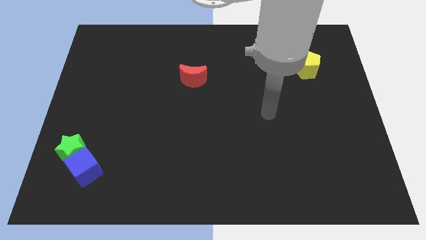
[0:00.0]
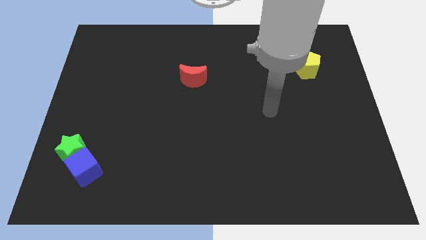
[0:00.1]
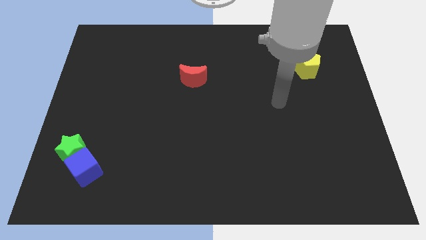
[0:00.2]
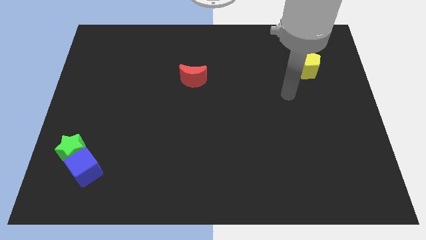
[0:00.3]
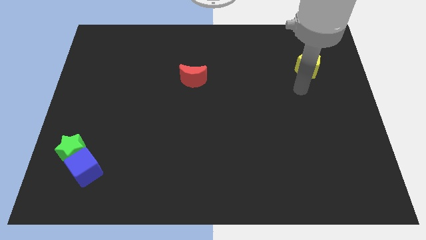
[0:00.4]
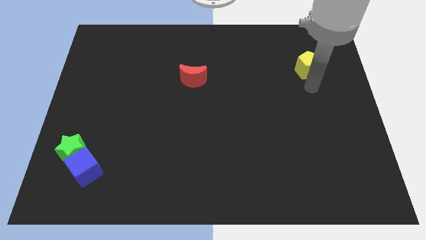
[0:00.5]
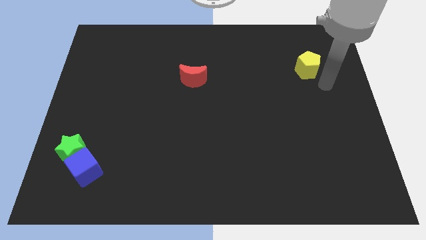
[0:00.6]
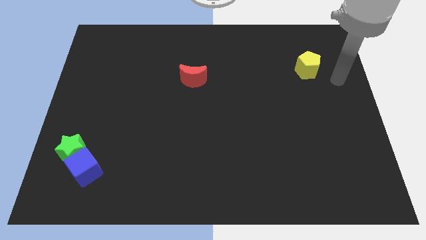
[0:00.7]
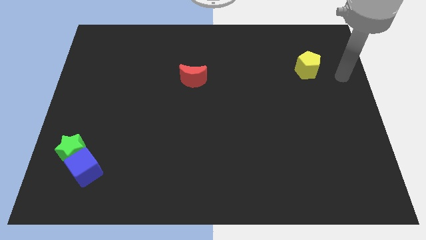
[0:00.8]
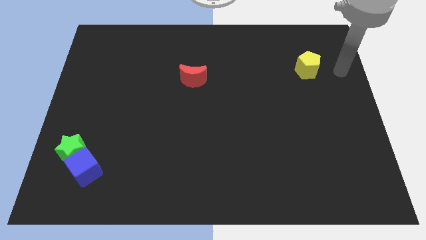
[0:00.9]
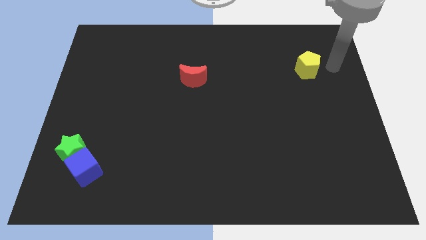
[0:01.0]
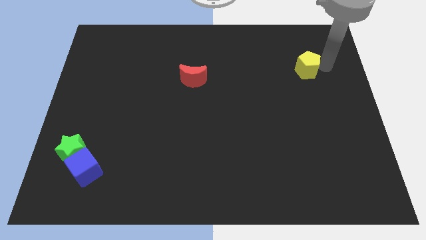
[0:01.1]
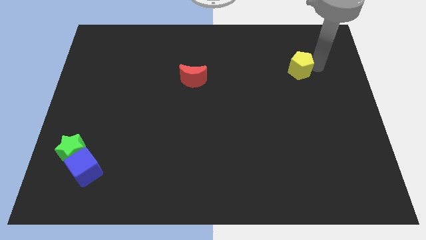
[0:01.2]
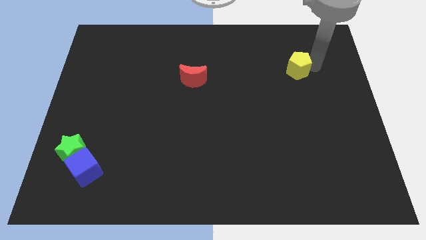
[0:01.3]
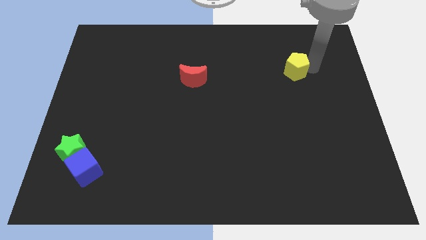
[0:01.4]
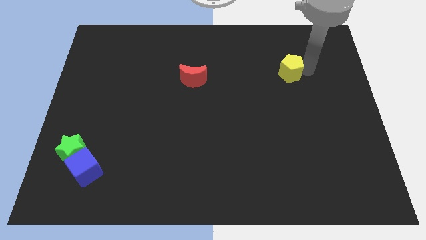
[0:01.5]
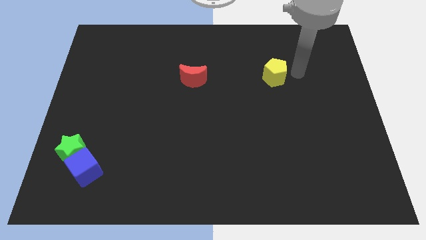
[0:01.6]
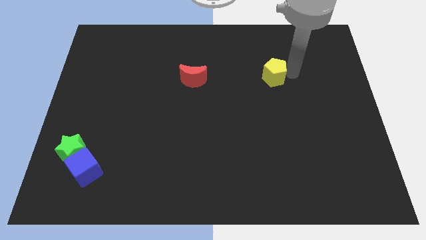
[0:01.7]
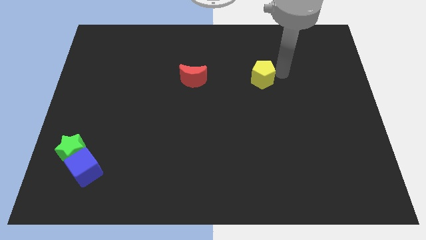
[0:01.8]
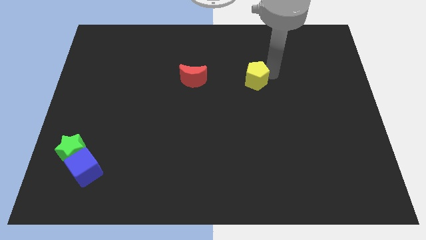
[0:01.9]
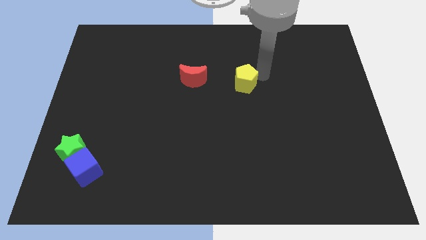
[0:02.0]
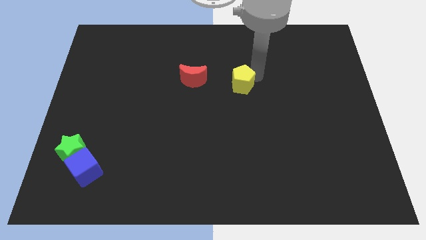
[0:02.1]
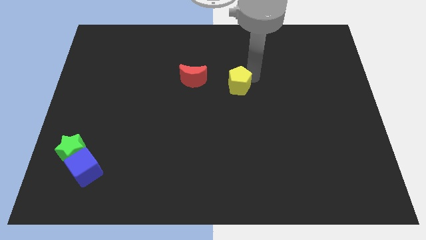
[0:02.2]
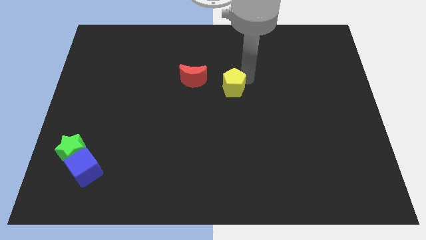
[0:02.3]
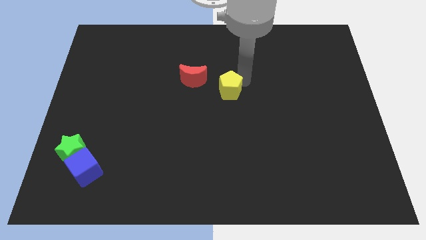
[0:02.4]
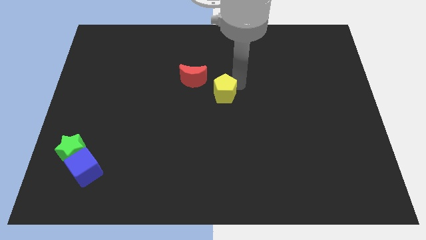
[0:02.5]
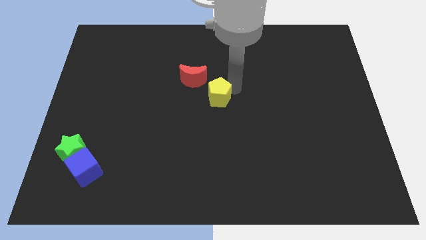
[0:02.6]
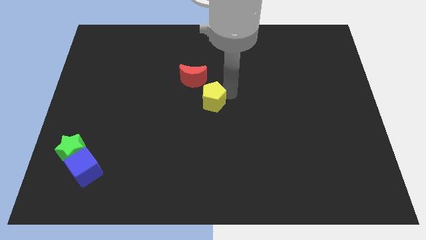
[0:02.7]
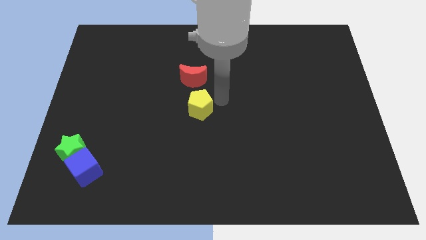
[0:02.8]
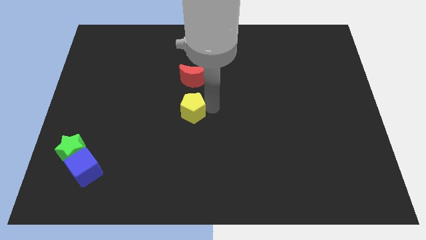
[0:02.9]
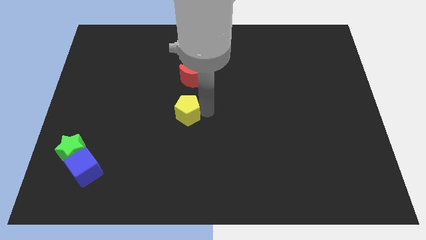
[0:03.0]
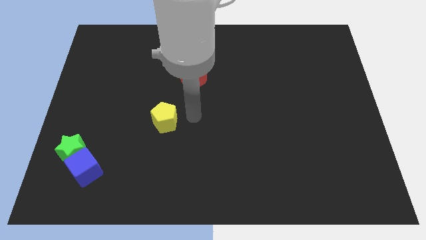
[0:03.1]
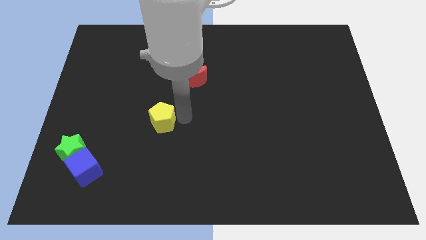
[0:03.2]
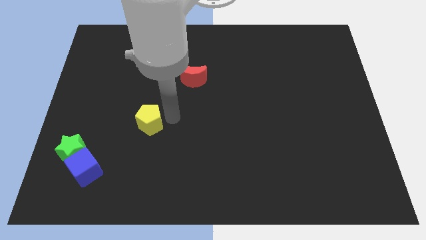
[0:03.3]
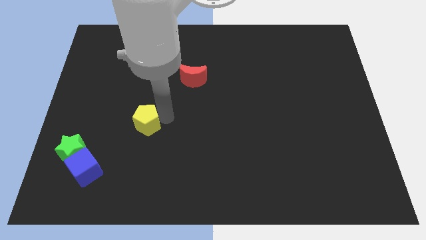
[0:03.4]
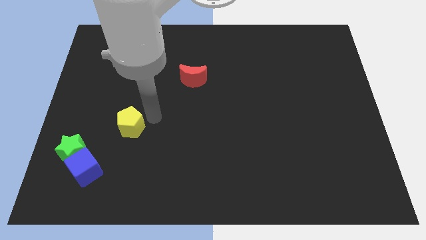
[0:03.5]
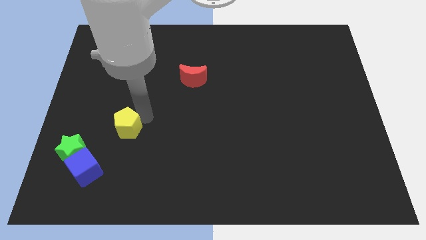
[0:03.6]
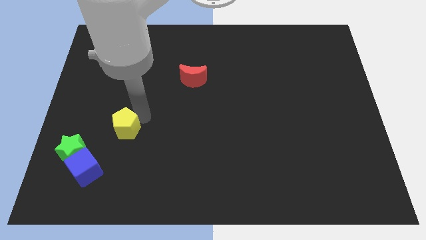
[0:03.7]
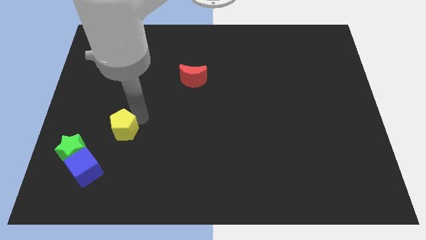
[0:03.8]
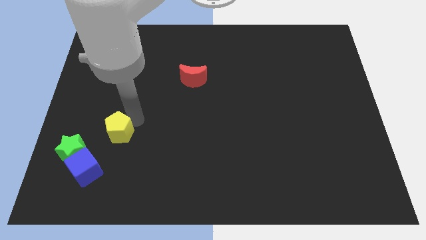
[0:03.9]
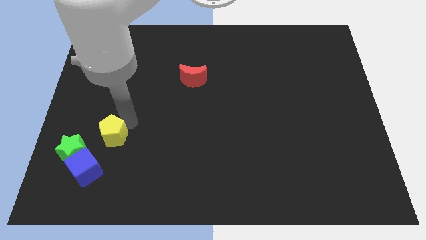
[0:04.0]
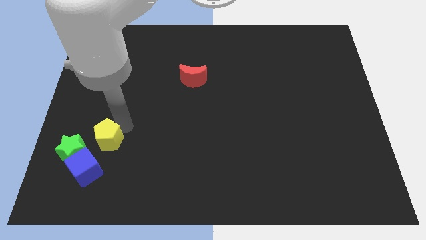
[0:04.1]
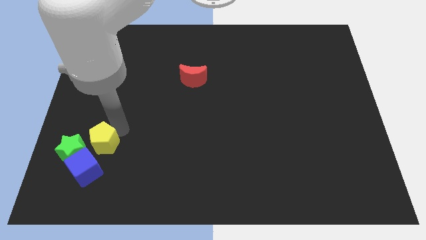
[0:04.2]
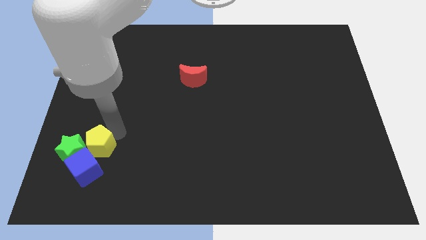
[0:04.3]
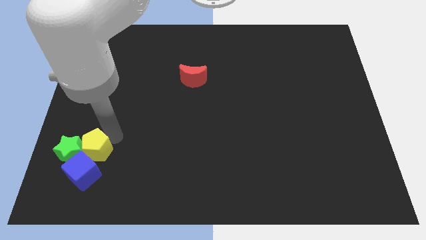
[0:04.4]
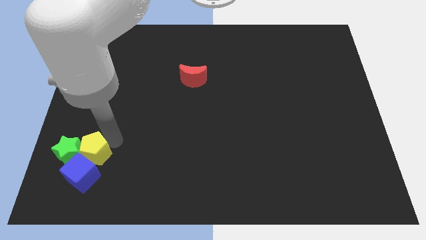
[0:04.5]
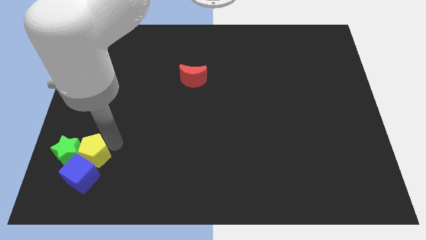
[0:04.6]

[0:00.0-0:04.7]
move the yellow pentagon to the cube

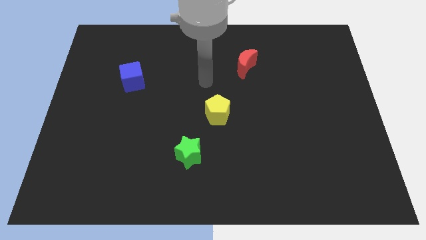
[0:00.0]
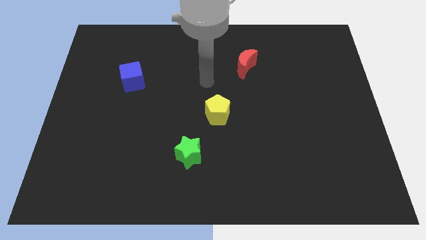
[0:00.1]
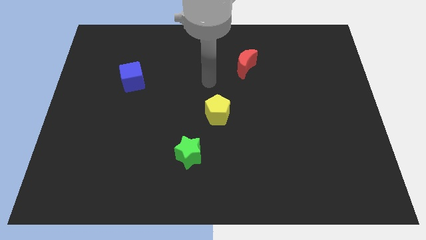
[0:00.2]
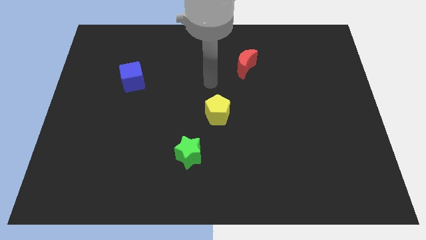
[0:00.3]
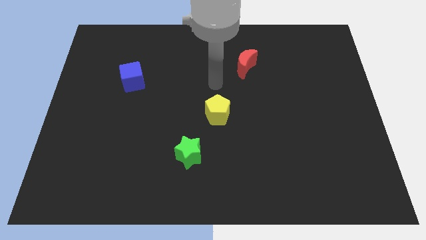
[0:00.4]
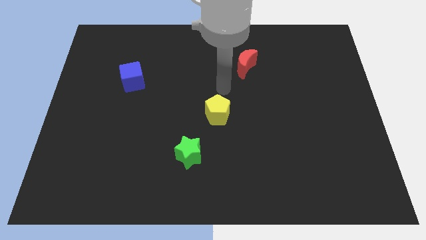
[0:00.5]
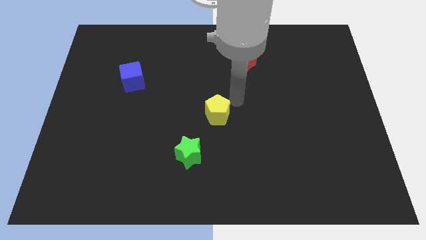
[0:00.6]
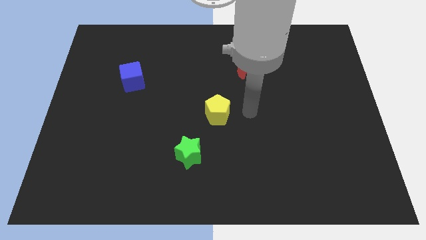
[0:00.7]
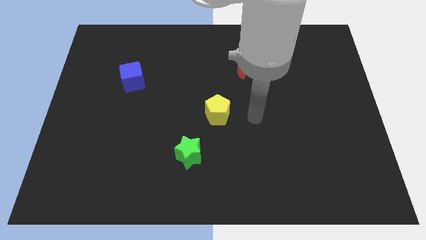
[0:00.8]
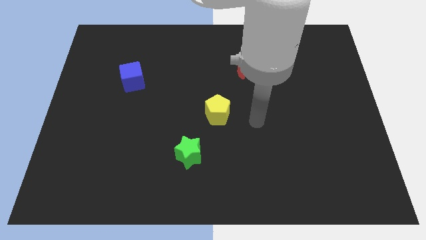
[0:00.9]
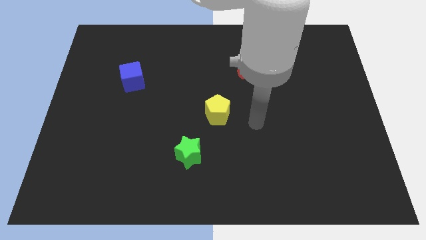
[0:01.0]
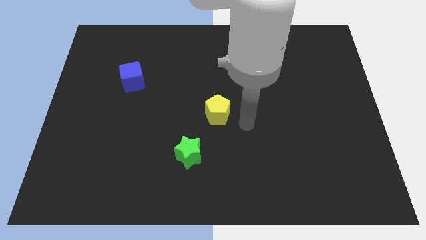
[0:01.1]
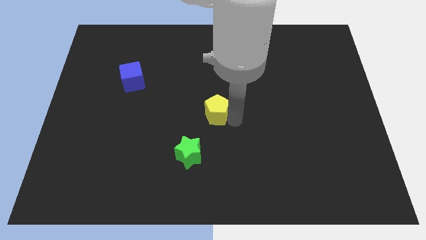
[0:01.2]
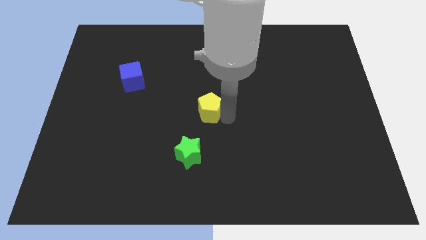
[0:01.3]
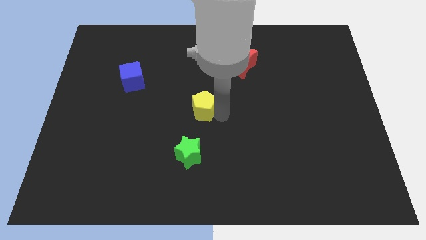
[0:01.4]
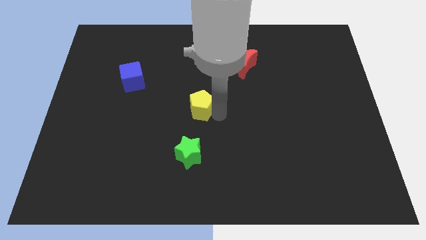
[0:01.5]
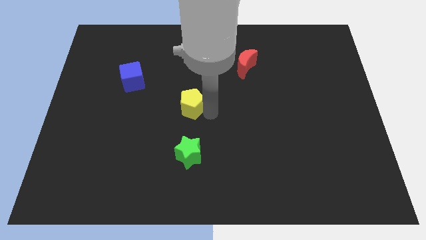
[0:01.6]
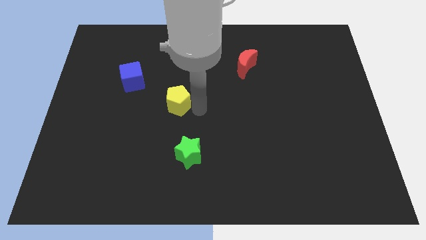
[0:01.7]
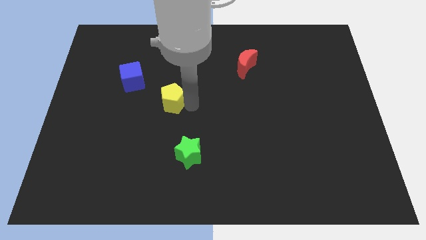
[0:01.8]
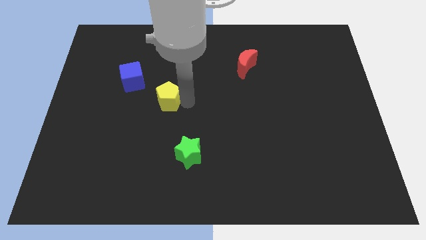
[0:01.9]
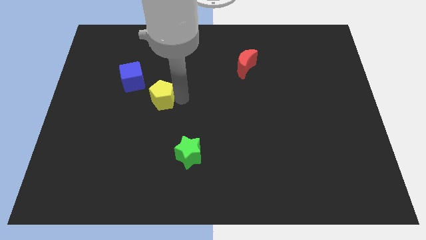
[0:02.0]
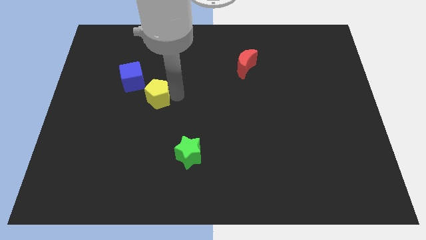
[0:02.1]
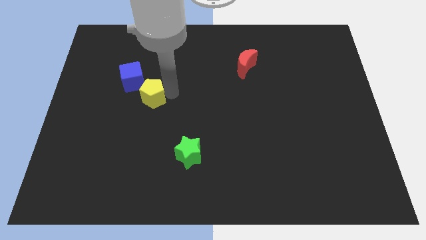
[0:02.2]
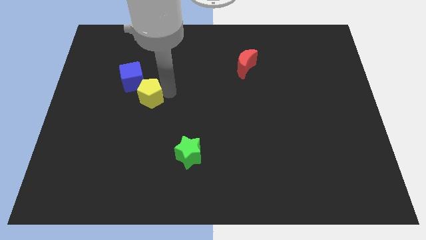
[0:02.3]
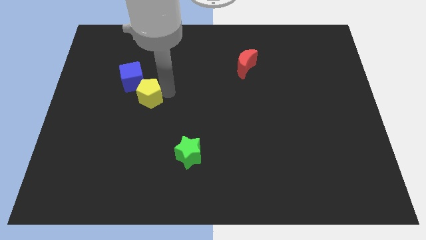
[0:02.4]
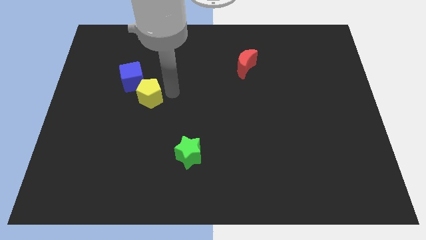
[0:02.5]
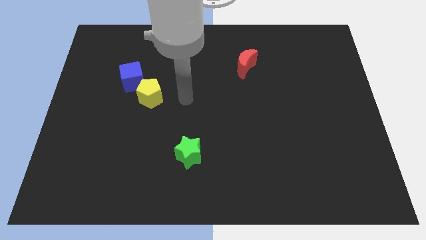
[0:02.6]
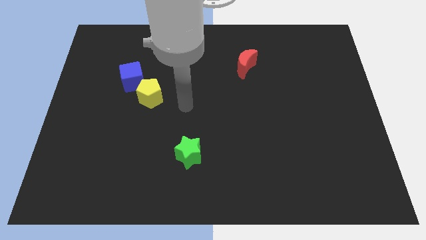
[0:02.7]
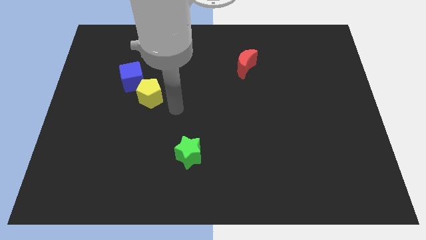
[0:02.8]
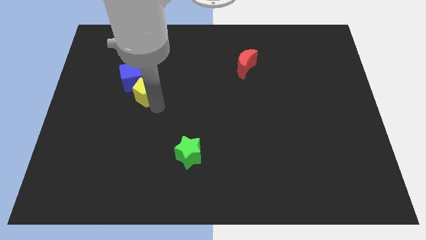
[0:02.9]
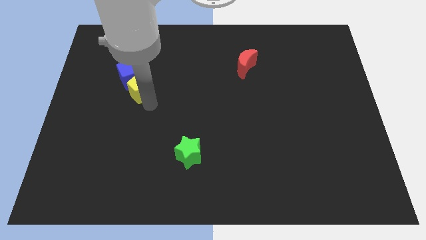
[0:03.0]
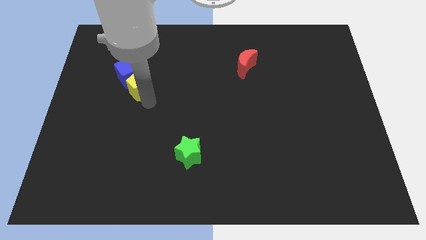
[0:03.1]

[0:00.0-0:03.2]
put the pentagon next to the cube

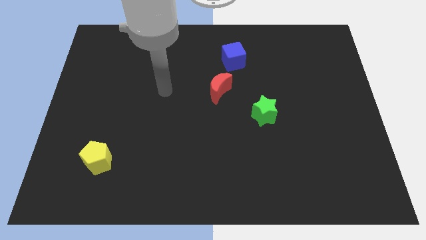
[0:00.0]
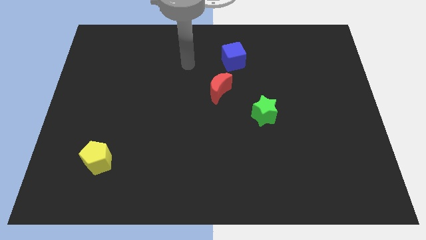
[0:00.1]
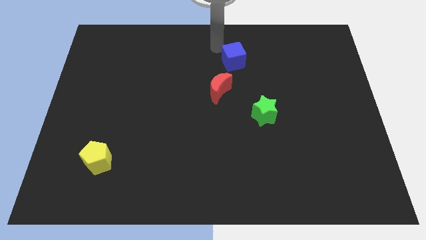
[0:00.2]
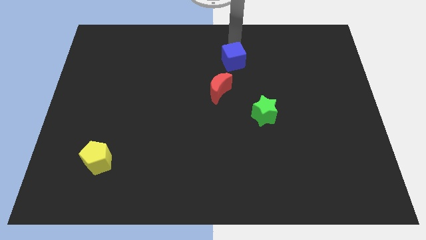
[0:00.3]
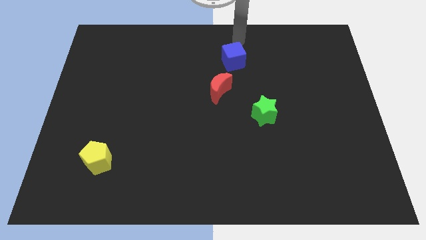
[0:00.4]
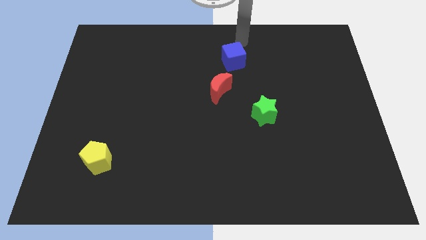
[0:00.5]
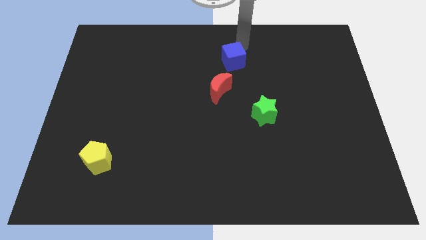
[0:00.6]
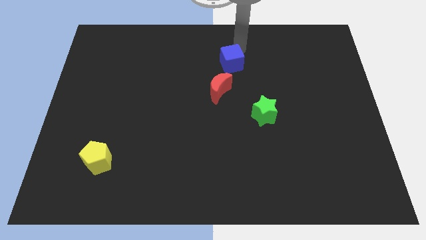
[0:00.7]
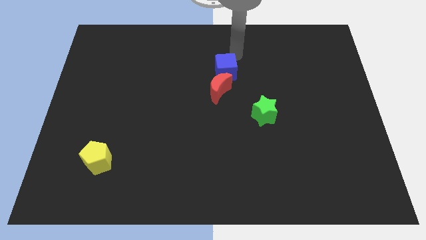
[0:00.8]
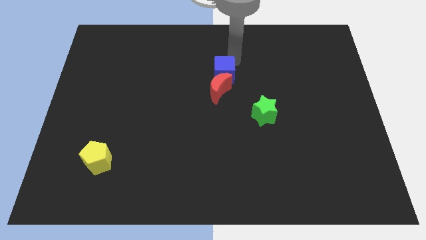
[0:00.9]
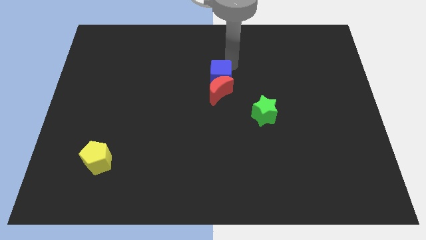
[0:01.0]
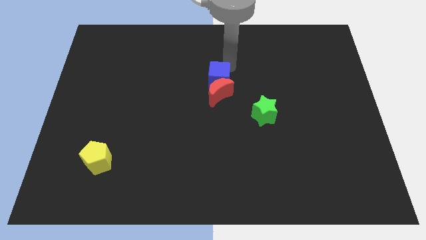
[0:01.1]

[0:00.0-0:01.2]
move the blue cube close to the moon
